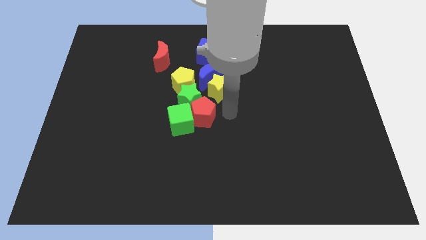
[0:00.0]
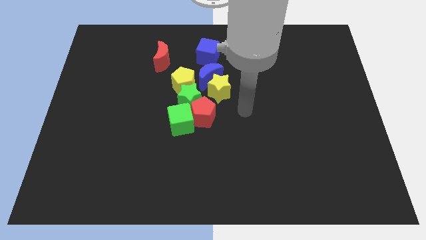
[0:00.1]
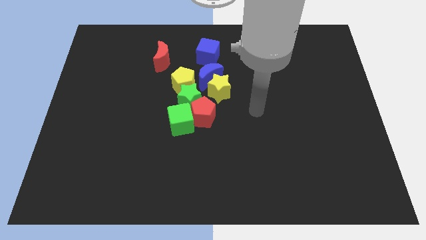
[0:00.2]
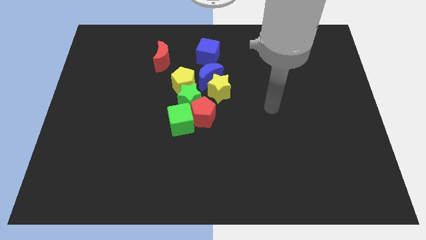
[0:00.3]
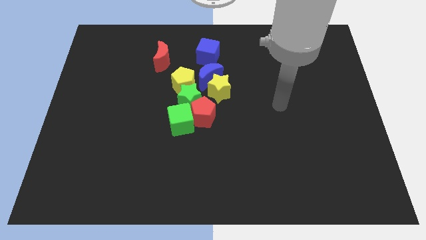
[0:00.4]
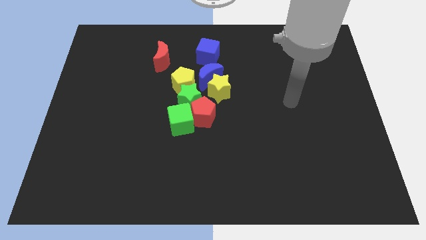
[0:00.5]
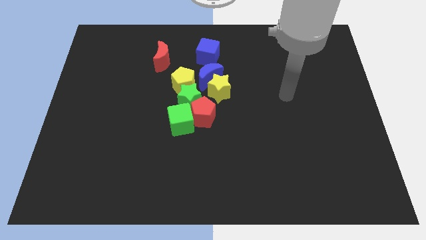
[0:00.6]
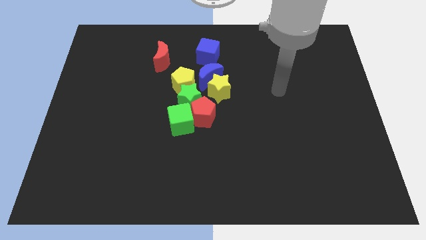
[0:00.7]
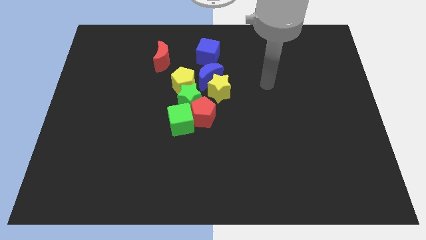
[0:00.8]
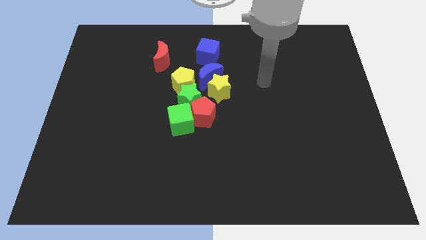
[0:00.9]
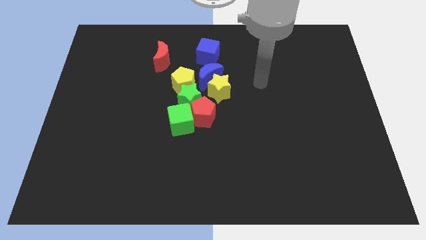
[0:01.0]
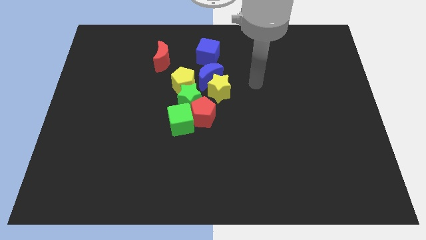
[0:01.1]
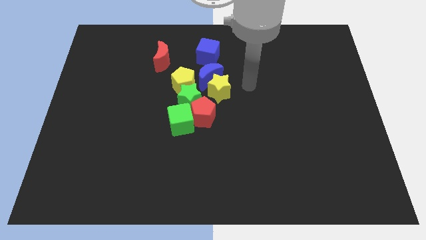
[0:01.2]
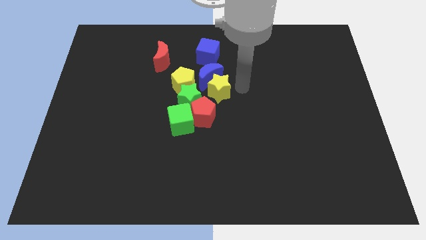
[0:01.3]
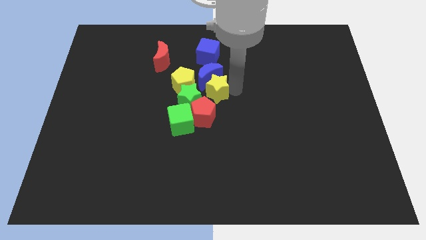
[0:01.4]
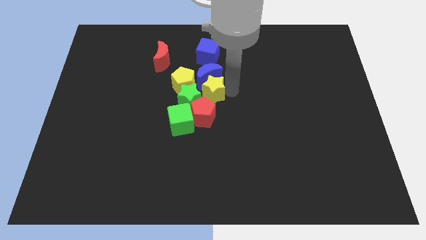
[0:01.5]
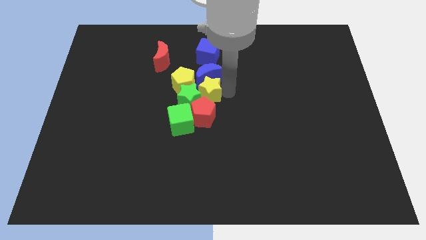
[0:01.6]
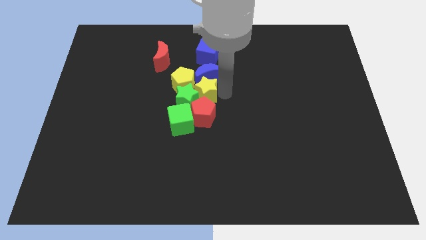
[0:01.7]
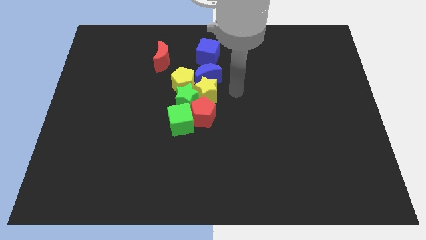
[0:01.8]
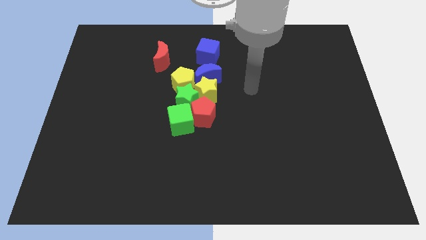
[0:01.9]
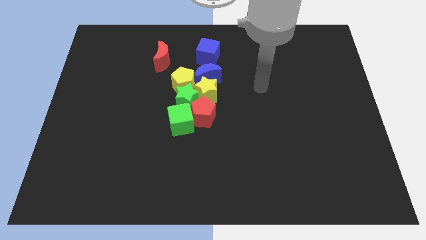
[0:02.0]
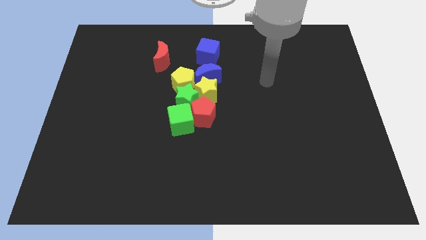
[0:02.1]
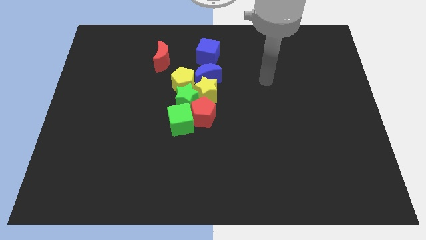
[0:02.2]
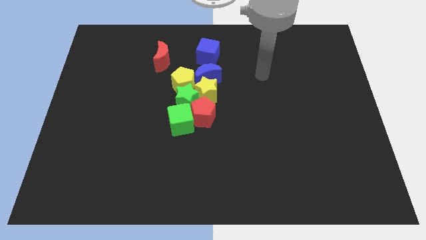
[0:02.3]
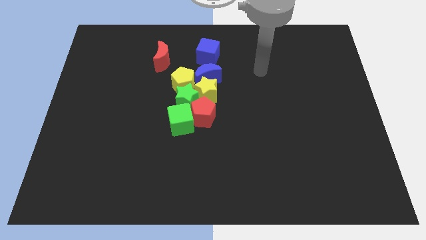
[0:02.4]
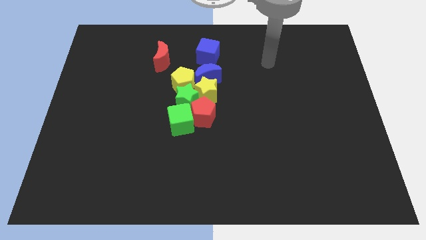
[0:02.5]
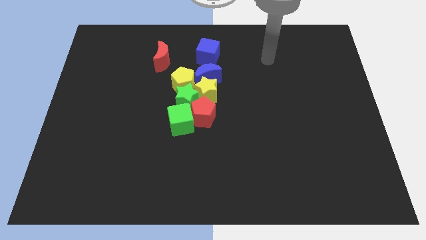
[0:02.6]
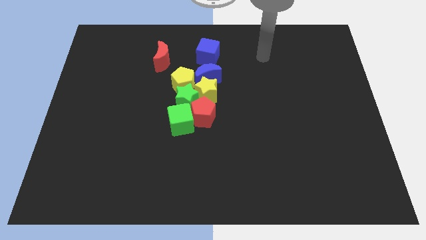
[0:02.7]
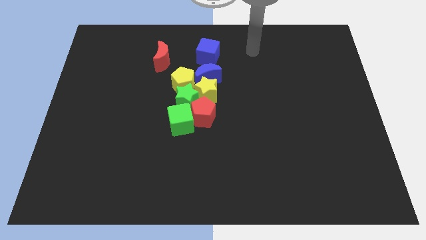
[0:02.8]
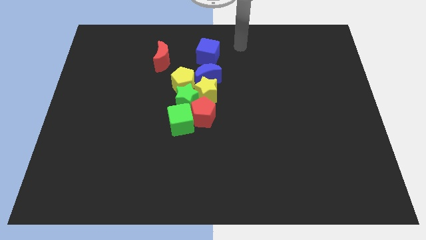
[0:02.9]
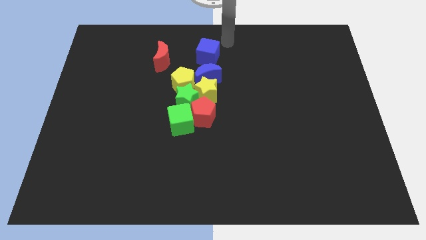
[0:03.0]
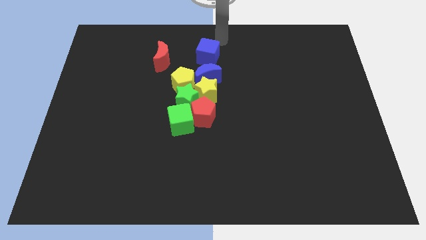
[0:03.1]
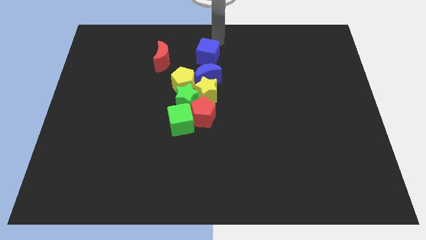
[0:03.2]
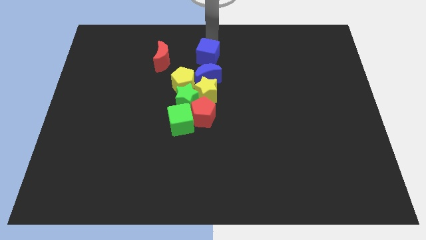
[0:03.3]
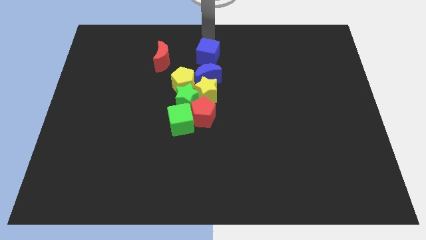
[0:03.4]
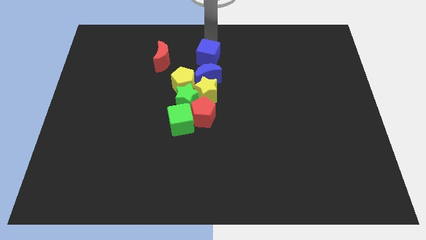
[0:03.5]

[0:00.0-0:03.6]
place your arm to the top blue cube

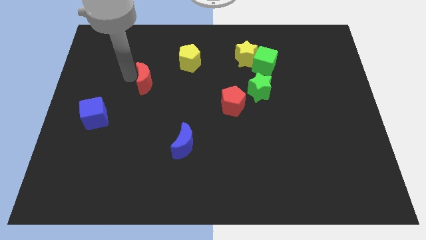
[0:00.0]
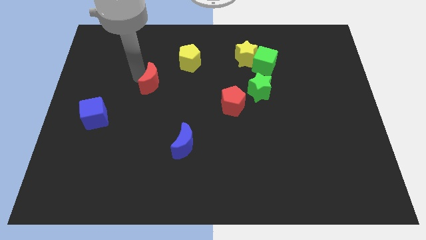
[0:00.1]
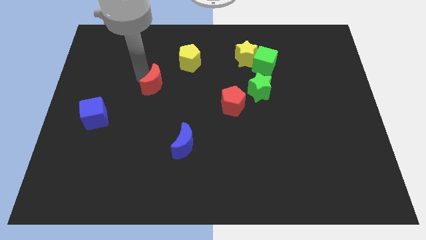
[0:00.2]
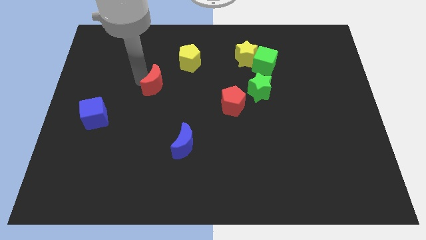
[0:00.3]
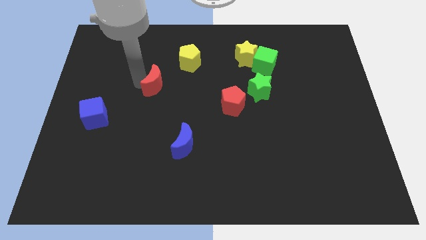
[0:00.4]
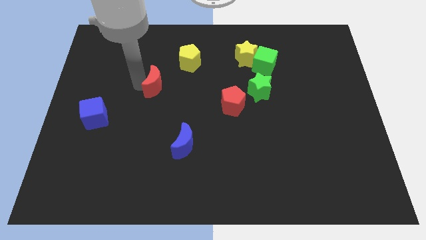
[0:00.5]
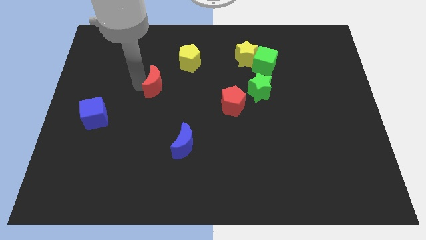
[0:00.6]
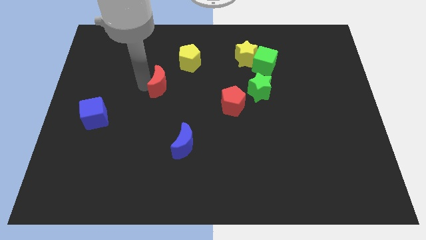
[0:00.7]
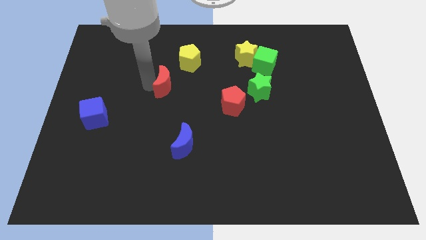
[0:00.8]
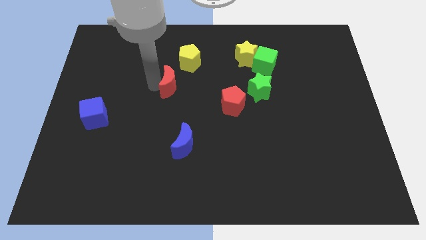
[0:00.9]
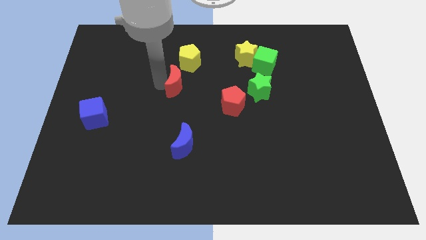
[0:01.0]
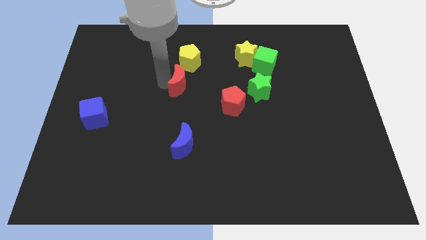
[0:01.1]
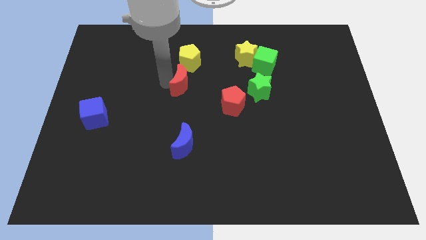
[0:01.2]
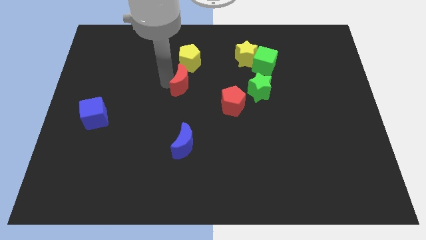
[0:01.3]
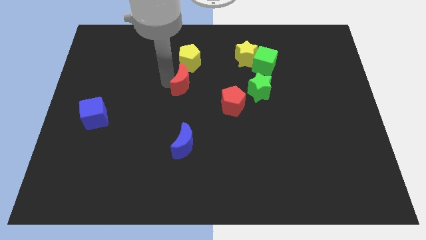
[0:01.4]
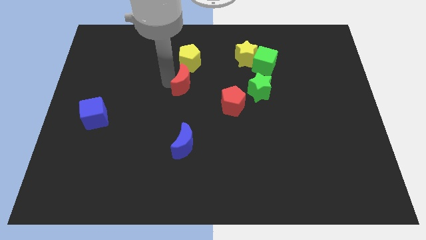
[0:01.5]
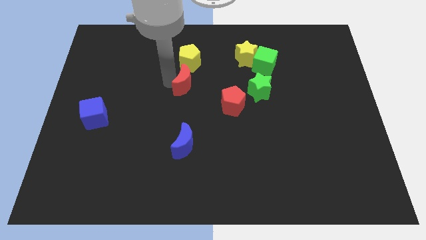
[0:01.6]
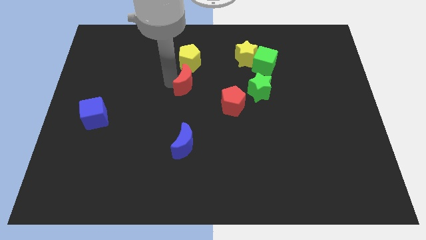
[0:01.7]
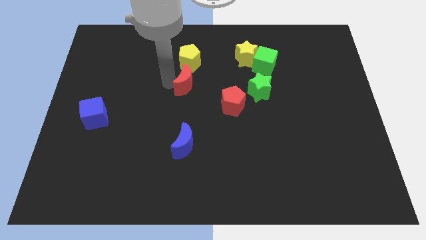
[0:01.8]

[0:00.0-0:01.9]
place the red moon in between the yellow pentagon and blue moon

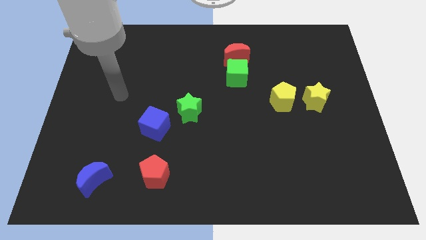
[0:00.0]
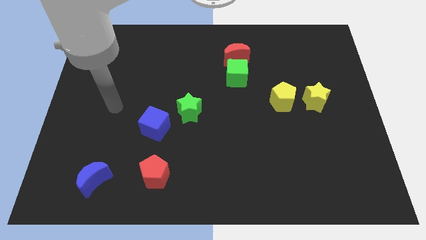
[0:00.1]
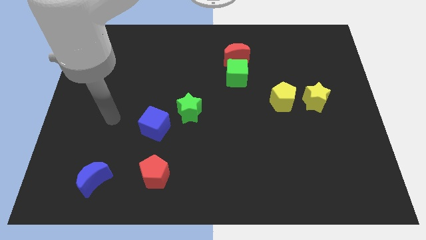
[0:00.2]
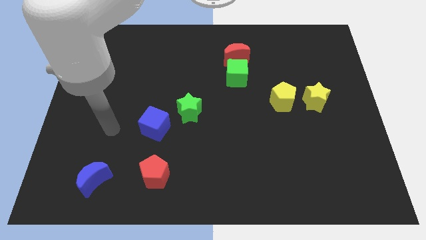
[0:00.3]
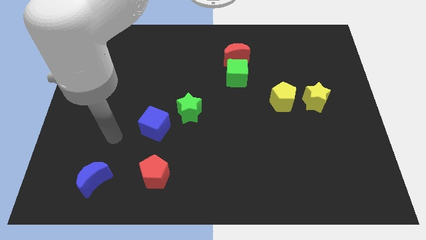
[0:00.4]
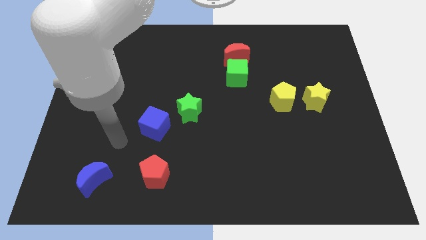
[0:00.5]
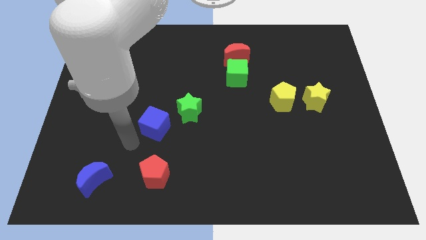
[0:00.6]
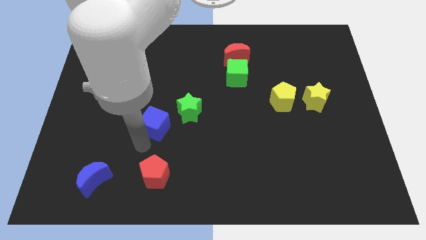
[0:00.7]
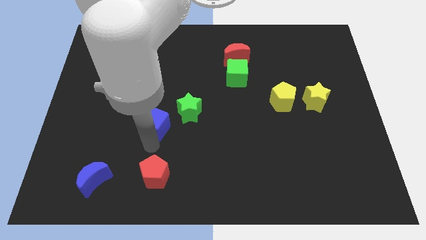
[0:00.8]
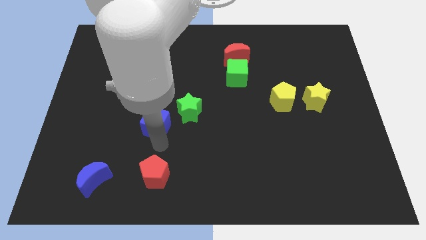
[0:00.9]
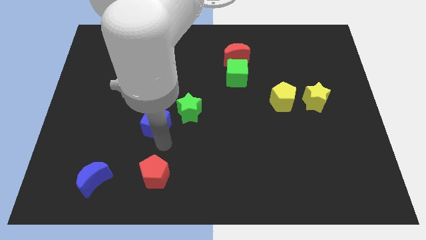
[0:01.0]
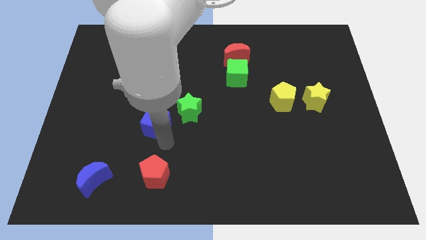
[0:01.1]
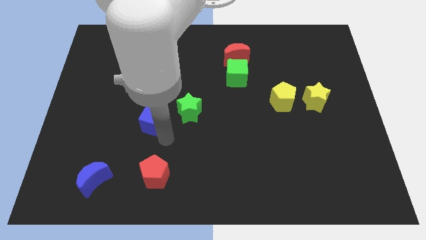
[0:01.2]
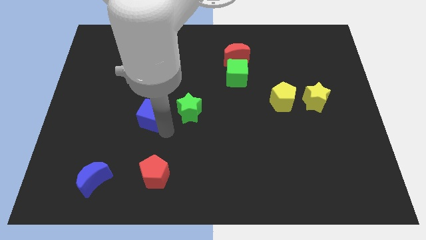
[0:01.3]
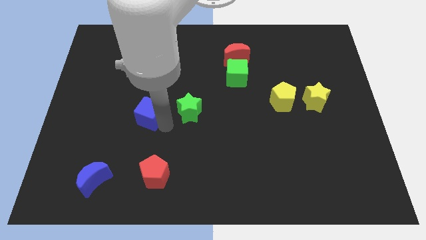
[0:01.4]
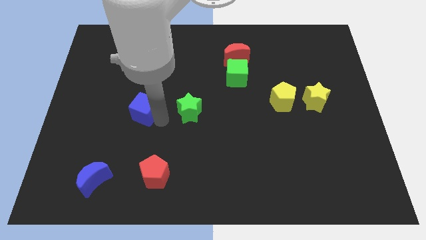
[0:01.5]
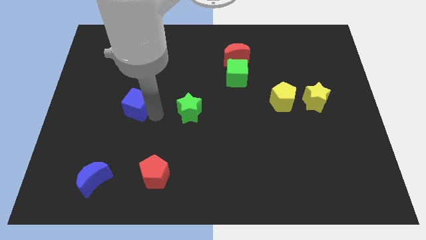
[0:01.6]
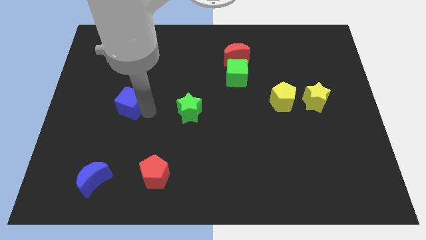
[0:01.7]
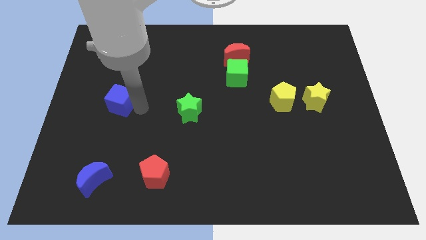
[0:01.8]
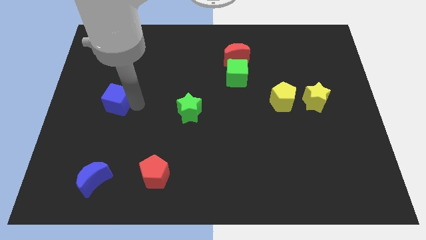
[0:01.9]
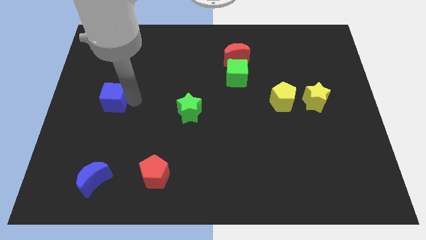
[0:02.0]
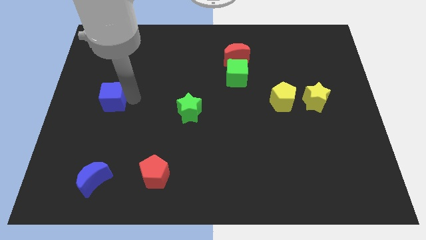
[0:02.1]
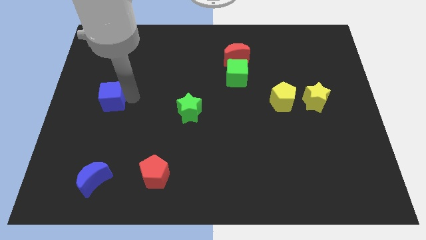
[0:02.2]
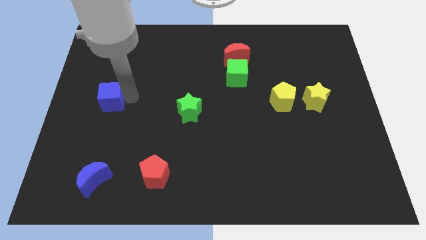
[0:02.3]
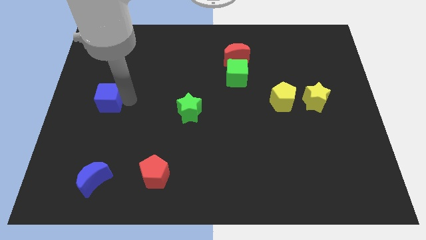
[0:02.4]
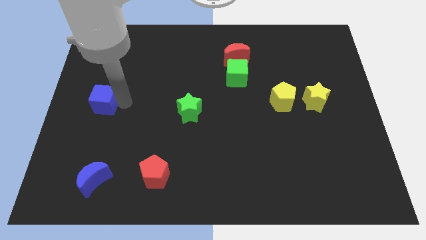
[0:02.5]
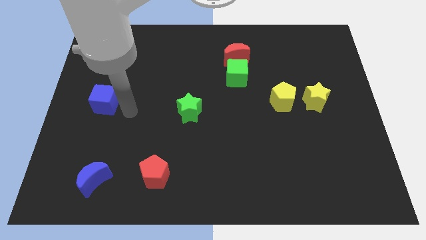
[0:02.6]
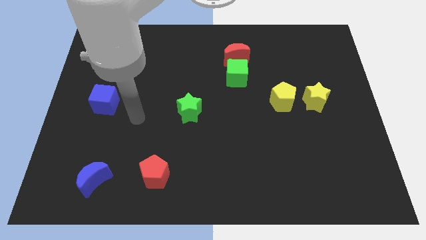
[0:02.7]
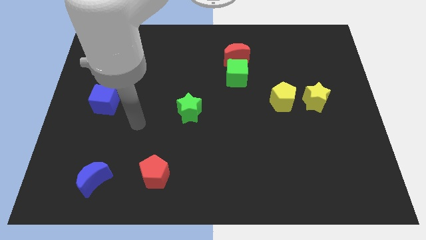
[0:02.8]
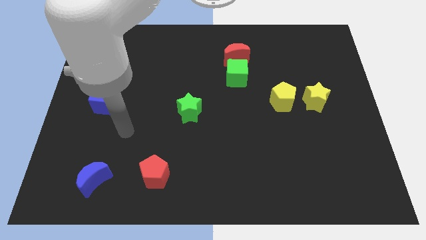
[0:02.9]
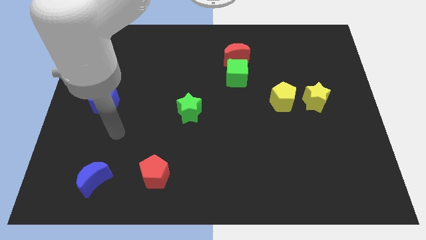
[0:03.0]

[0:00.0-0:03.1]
place the blue cube above the blue moon

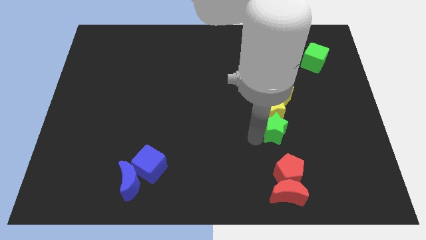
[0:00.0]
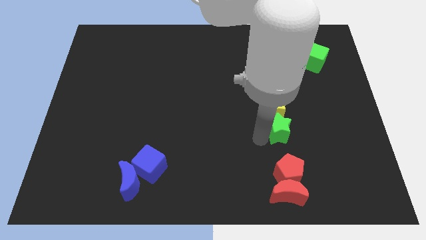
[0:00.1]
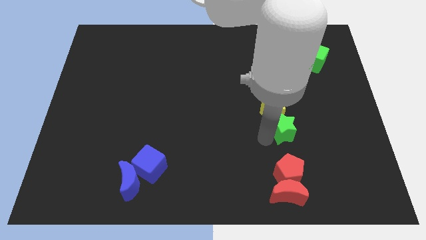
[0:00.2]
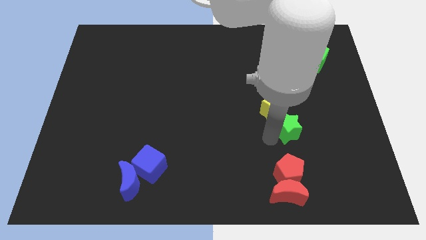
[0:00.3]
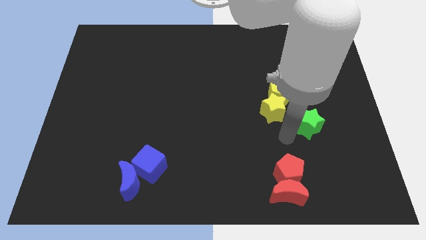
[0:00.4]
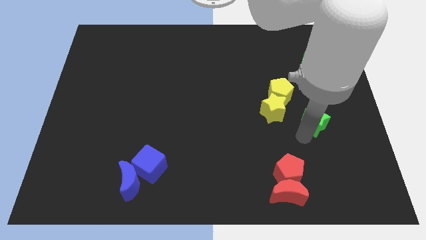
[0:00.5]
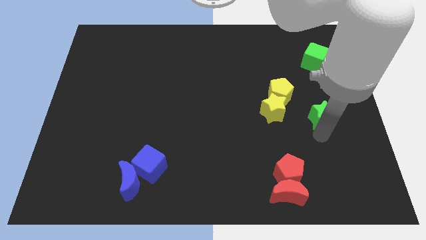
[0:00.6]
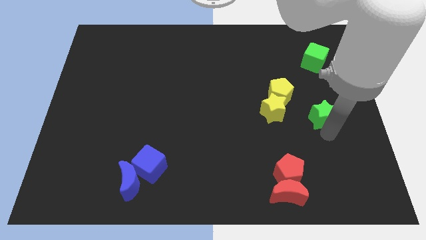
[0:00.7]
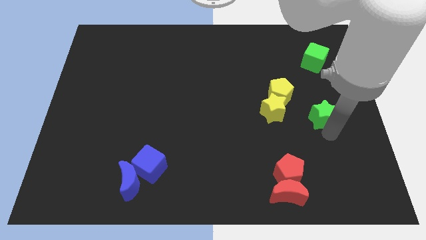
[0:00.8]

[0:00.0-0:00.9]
separate the green star from the yellow blocks
